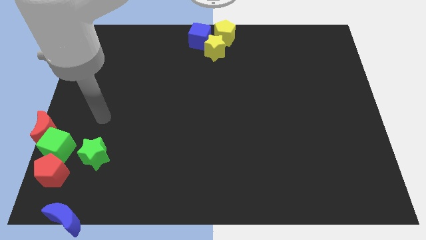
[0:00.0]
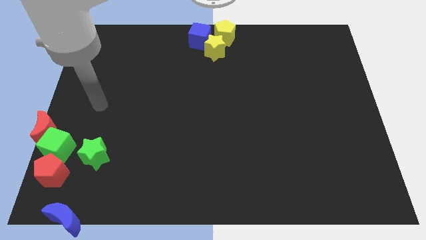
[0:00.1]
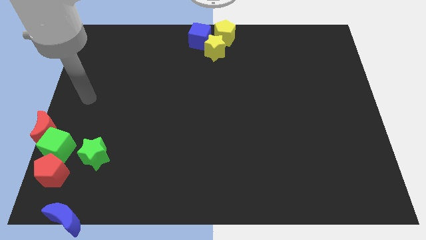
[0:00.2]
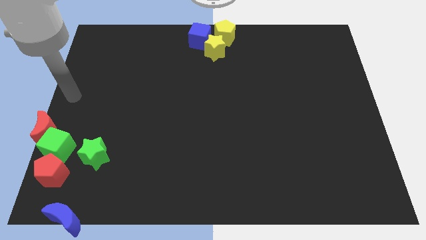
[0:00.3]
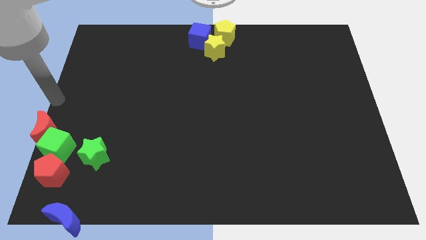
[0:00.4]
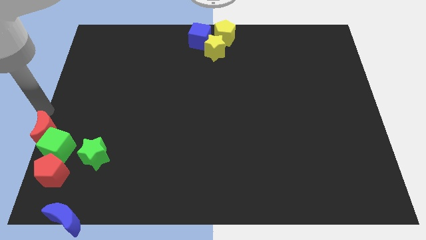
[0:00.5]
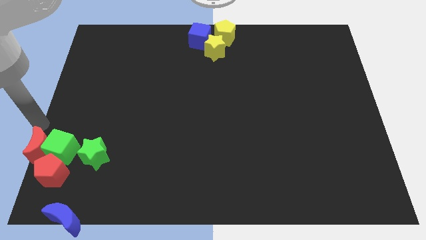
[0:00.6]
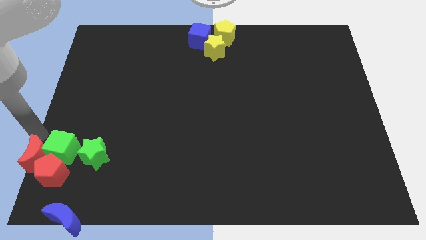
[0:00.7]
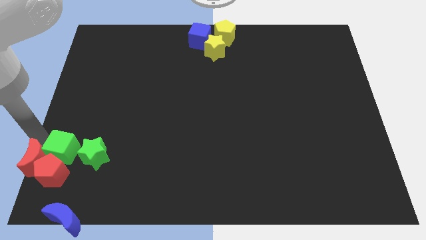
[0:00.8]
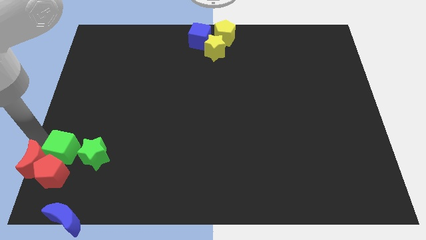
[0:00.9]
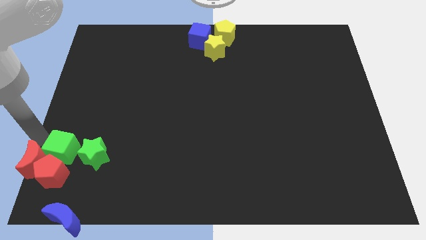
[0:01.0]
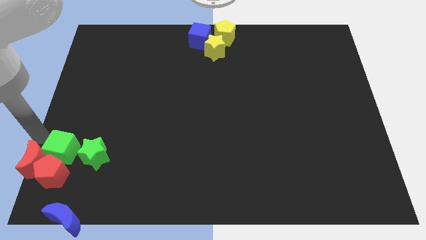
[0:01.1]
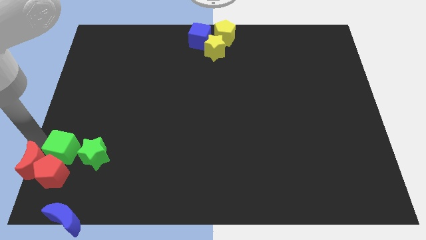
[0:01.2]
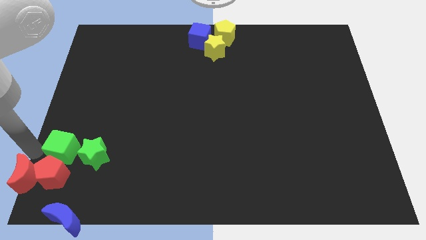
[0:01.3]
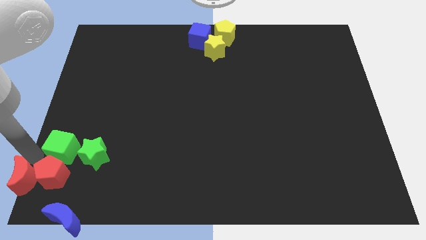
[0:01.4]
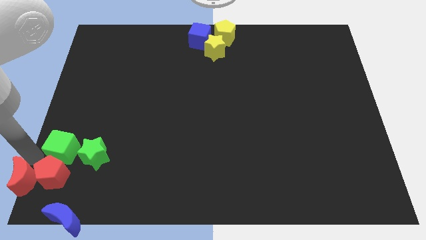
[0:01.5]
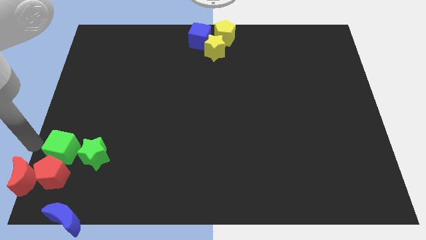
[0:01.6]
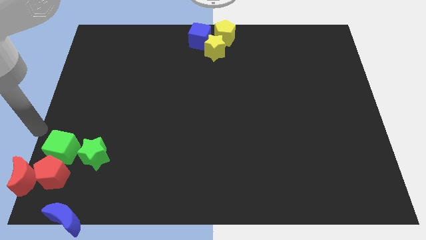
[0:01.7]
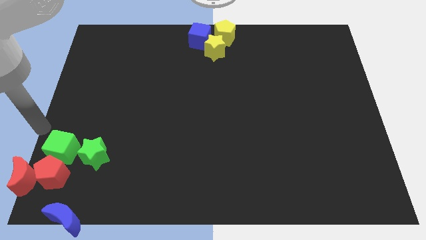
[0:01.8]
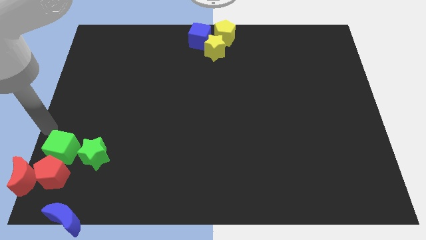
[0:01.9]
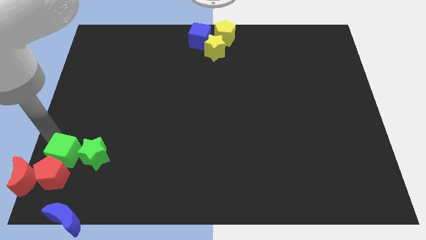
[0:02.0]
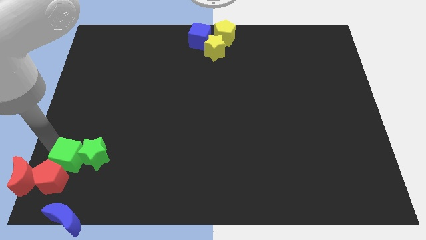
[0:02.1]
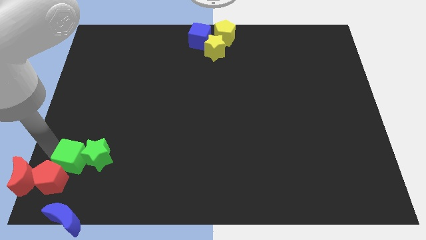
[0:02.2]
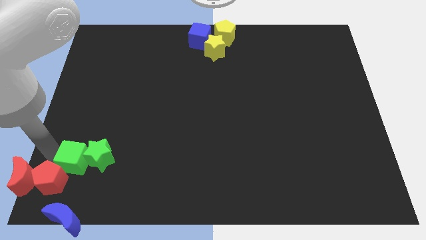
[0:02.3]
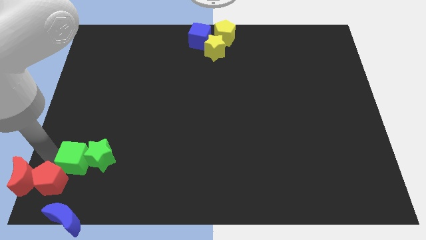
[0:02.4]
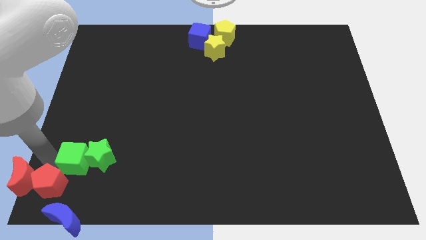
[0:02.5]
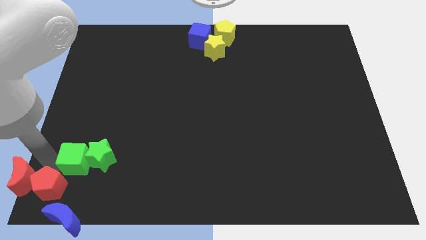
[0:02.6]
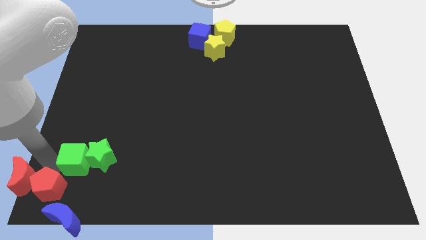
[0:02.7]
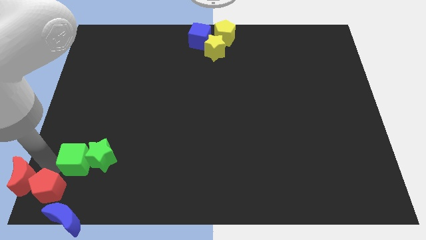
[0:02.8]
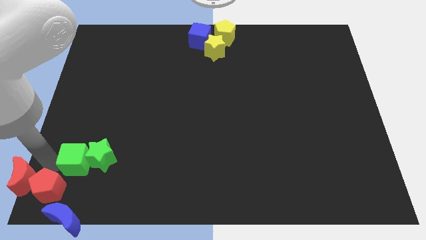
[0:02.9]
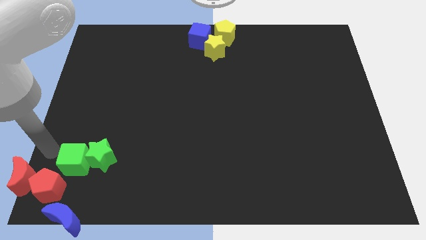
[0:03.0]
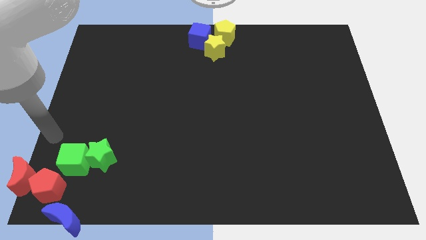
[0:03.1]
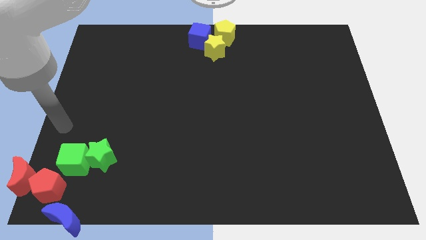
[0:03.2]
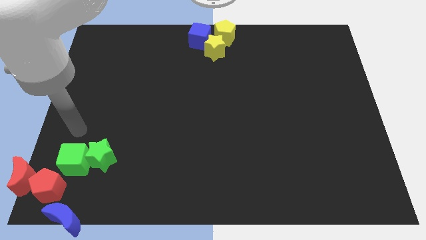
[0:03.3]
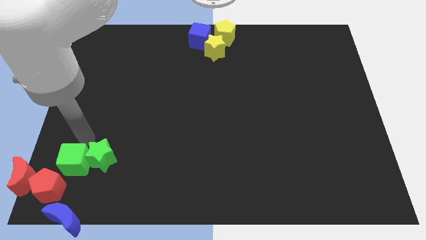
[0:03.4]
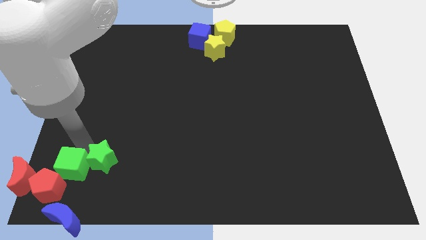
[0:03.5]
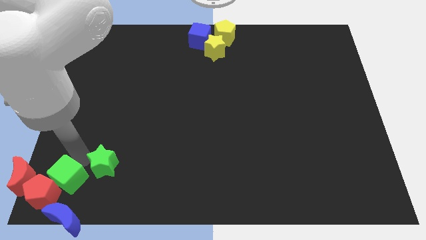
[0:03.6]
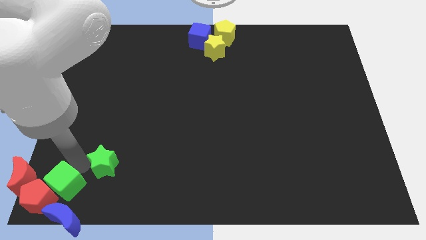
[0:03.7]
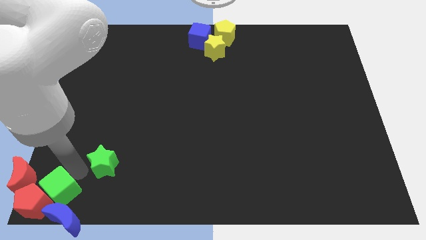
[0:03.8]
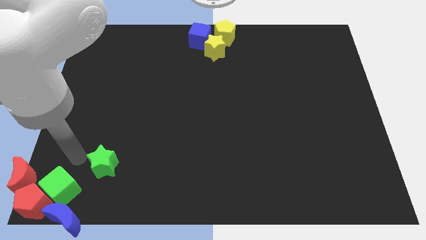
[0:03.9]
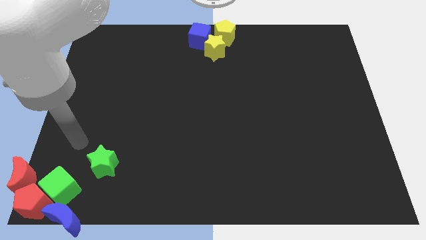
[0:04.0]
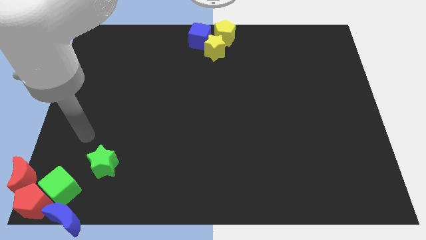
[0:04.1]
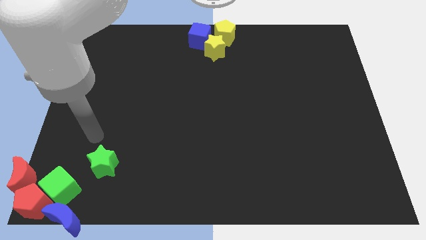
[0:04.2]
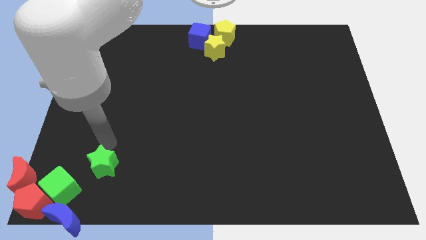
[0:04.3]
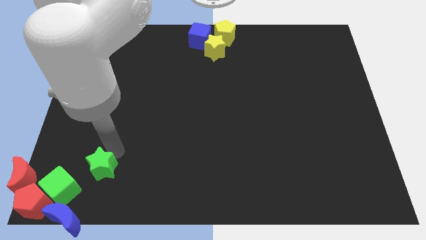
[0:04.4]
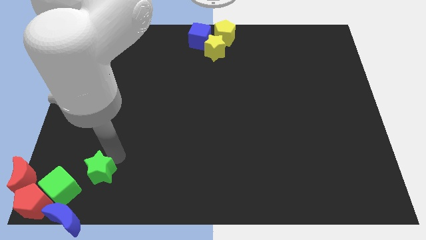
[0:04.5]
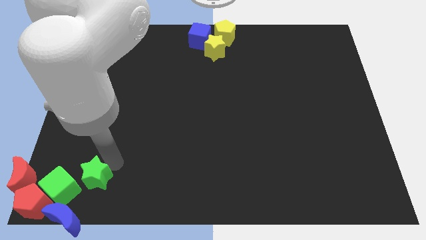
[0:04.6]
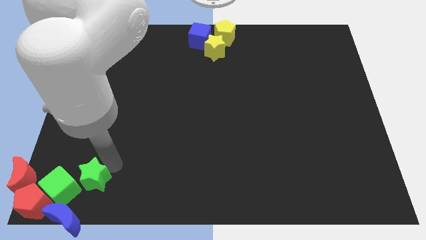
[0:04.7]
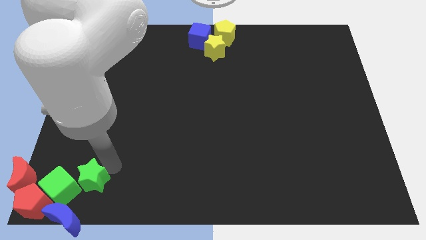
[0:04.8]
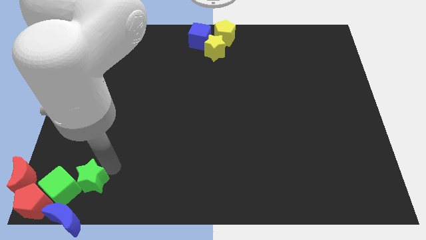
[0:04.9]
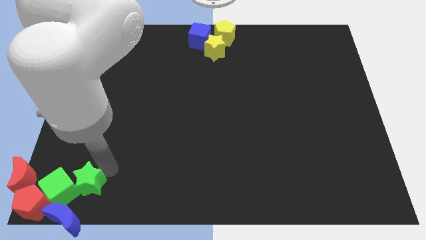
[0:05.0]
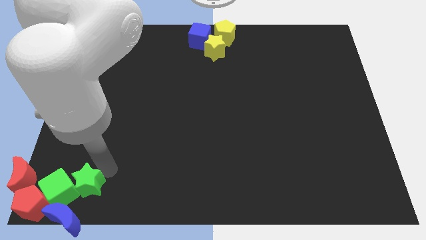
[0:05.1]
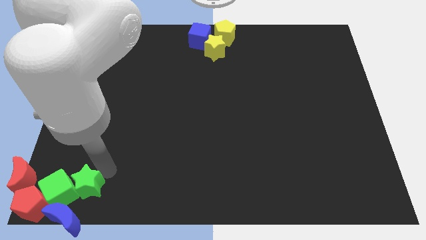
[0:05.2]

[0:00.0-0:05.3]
group all the blocks except the yellow blocks and blue cube at the bottom left corner of the table

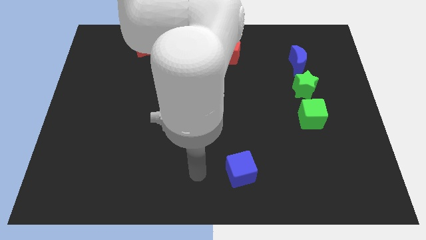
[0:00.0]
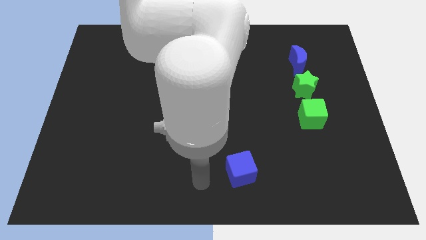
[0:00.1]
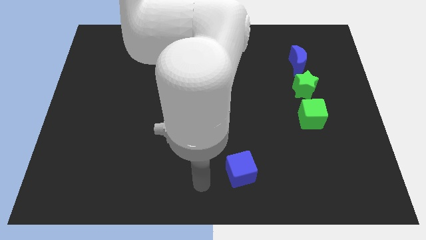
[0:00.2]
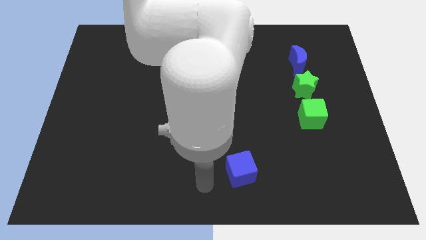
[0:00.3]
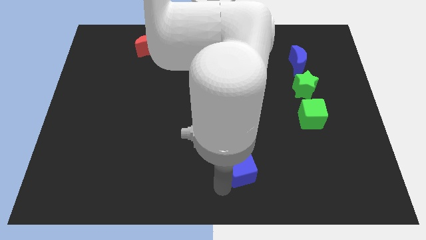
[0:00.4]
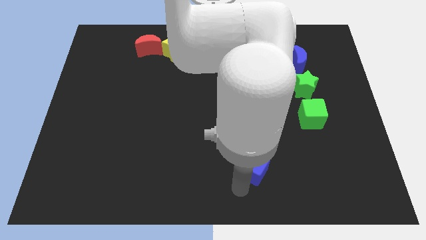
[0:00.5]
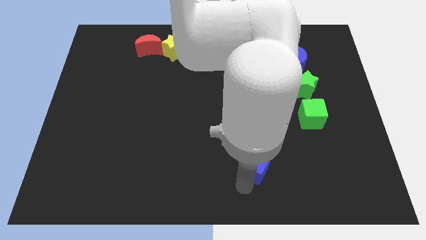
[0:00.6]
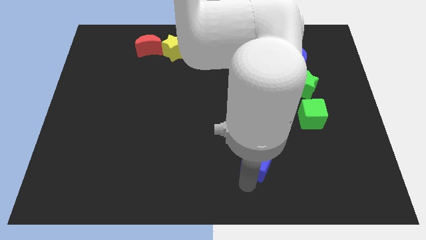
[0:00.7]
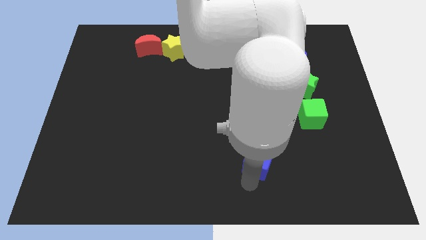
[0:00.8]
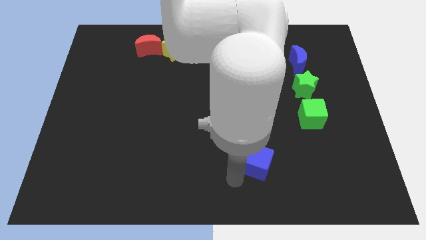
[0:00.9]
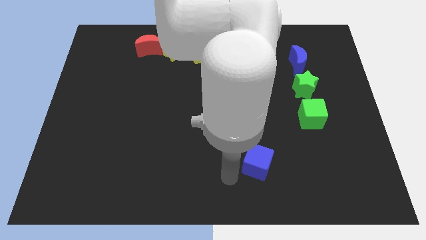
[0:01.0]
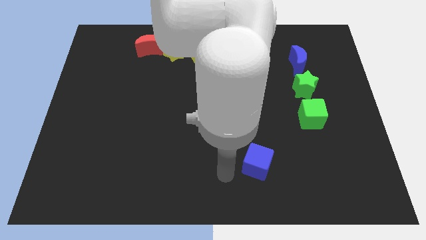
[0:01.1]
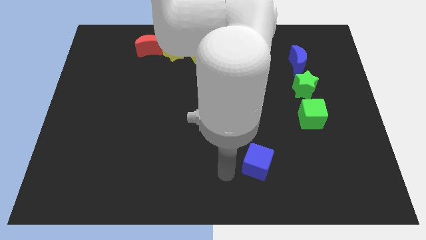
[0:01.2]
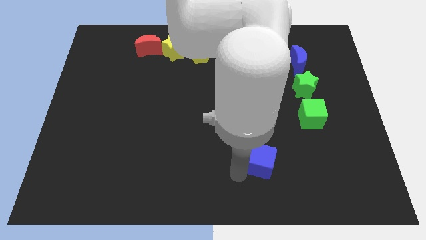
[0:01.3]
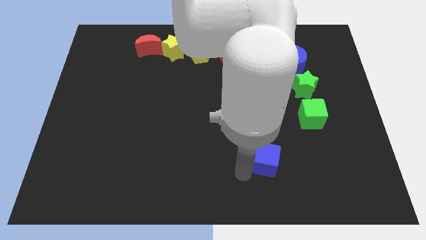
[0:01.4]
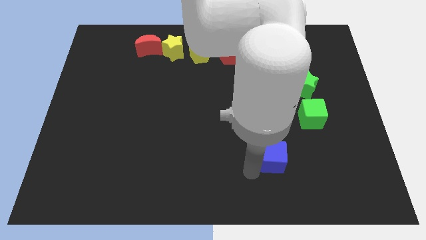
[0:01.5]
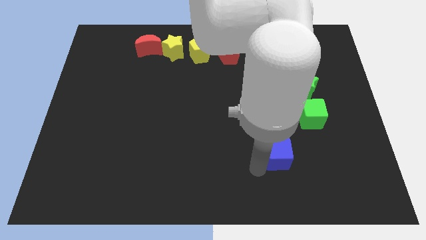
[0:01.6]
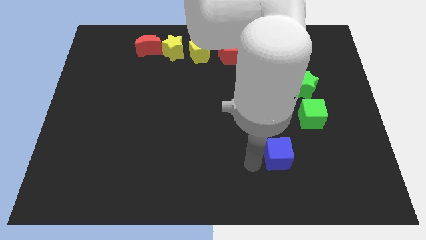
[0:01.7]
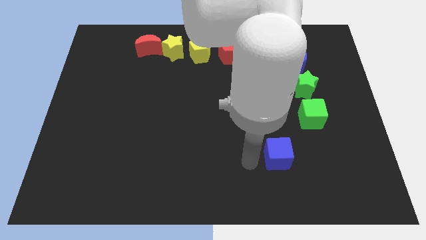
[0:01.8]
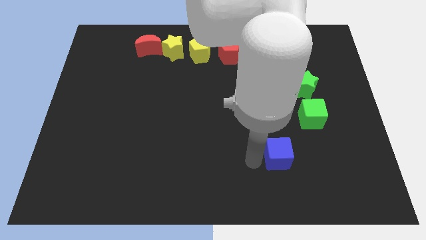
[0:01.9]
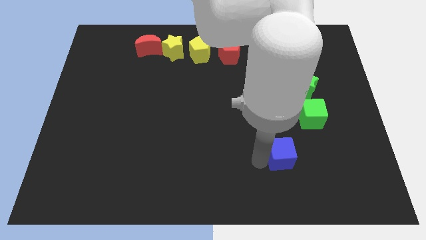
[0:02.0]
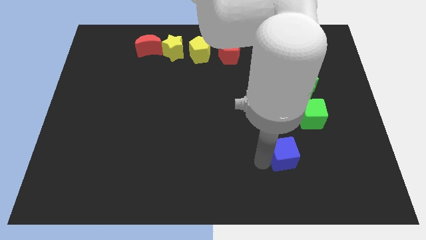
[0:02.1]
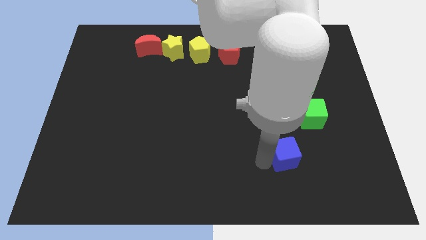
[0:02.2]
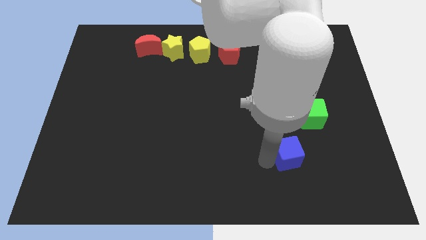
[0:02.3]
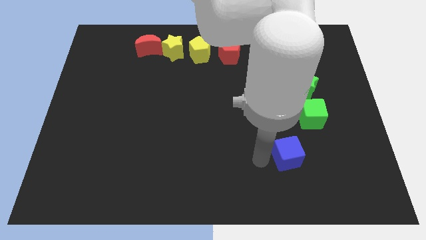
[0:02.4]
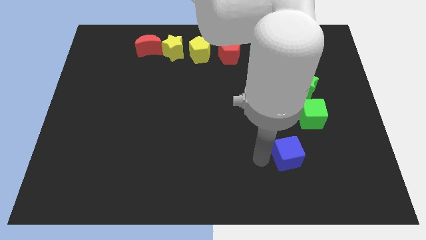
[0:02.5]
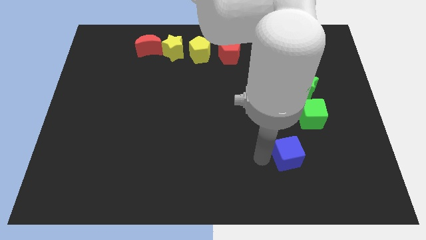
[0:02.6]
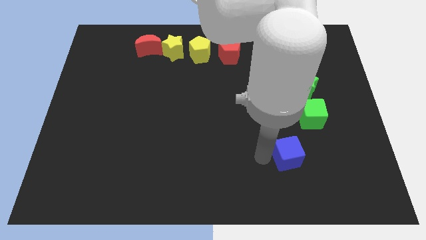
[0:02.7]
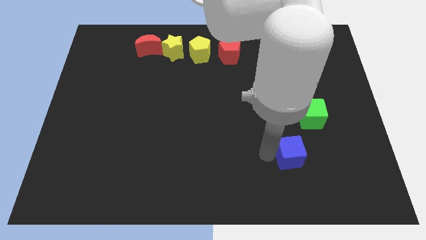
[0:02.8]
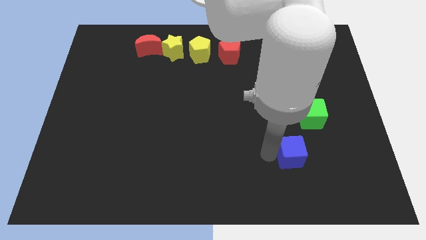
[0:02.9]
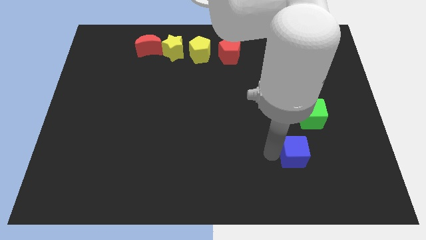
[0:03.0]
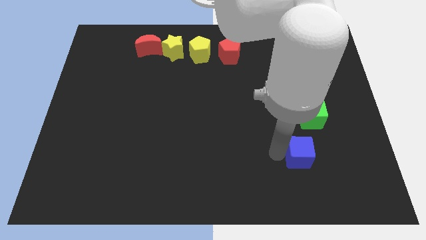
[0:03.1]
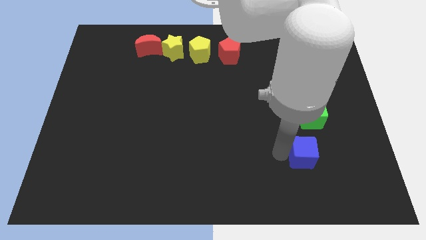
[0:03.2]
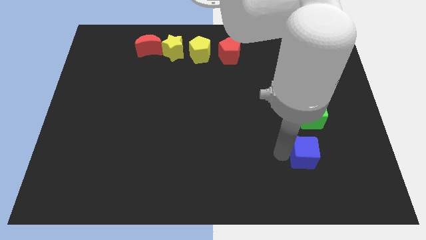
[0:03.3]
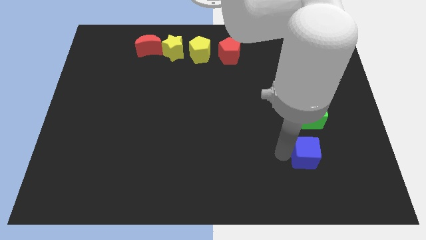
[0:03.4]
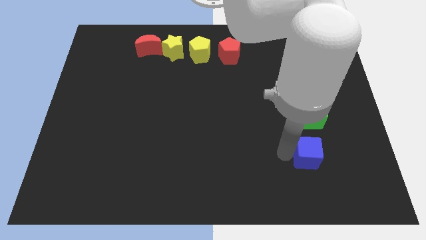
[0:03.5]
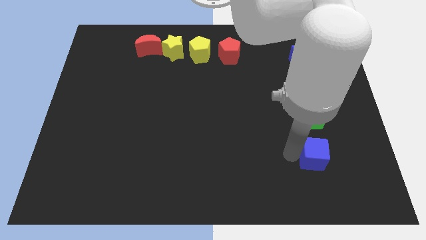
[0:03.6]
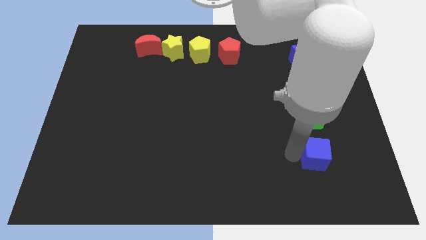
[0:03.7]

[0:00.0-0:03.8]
move the blue cube below the green cube
